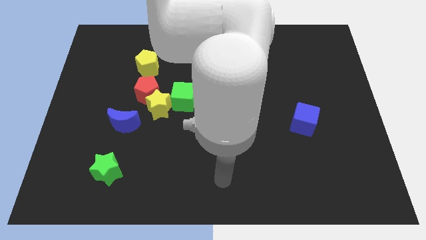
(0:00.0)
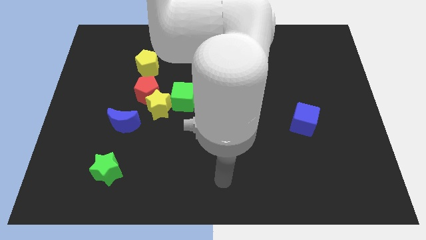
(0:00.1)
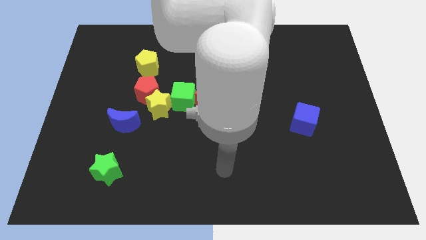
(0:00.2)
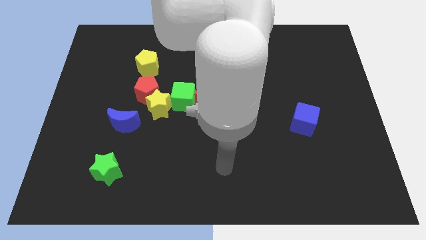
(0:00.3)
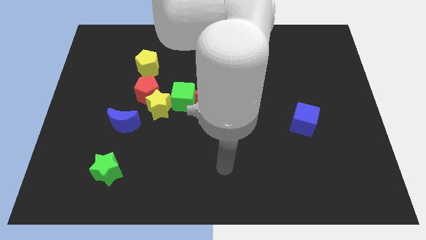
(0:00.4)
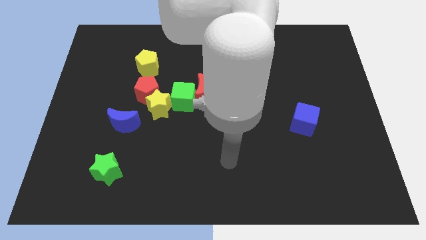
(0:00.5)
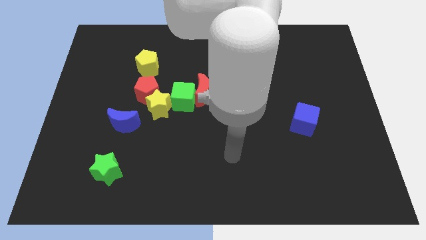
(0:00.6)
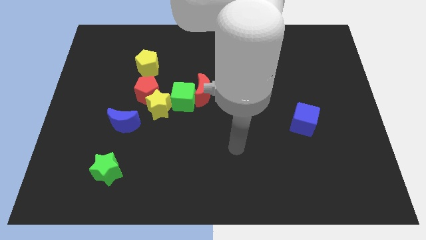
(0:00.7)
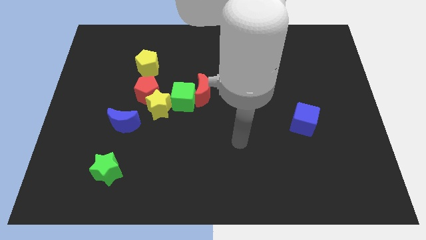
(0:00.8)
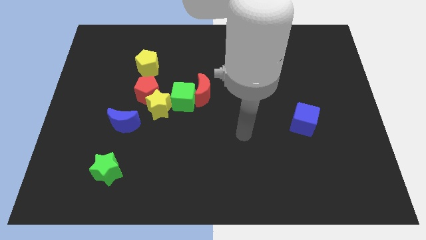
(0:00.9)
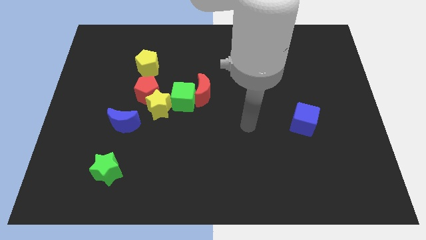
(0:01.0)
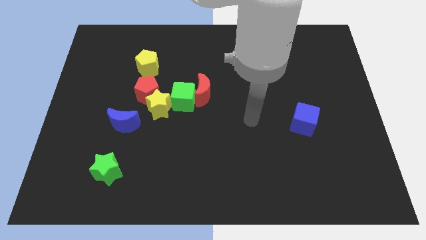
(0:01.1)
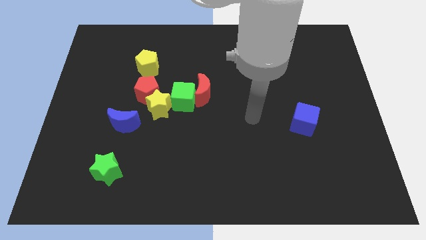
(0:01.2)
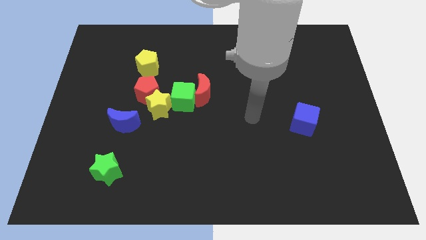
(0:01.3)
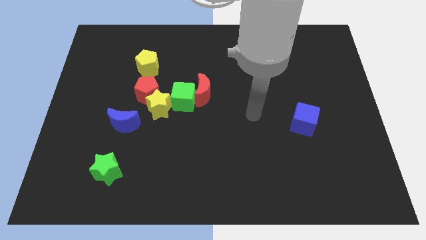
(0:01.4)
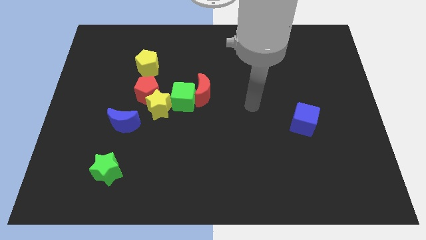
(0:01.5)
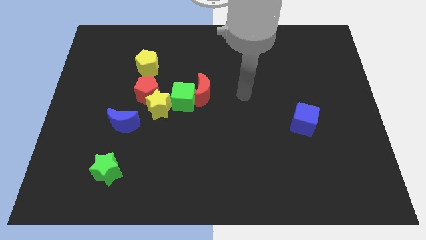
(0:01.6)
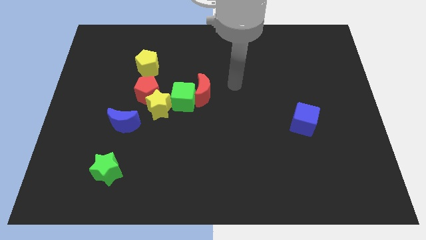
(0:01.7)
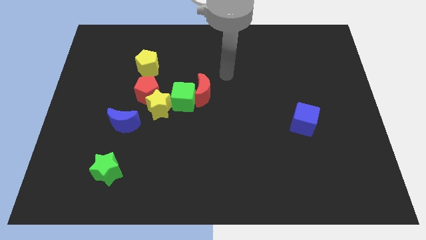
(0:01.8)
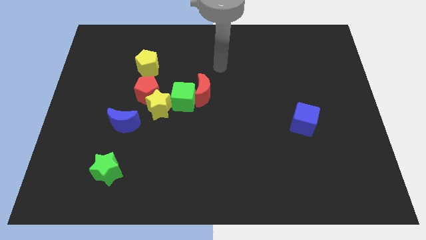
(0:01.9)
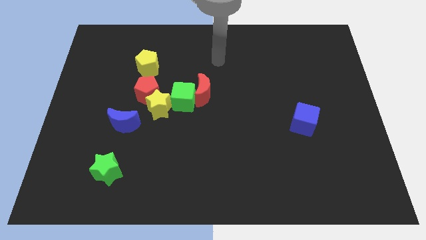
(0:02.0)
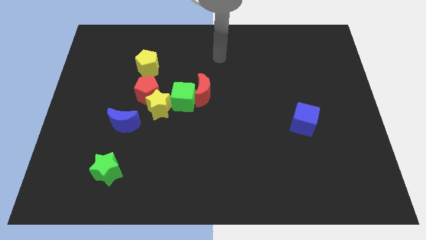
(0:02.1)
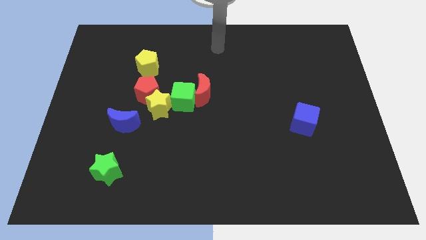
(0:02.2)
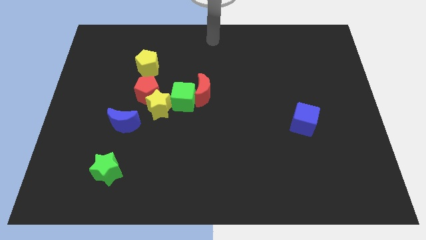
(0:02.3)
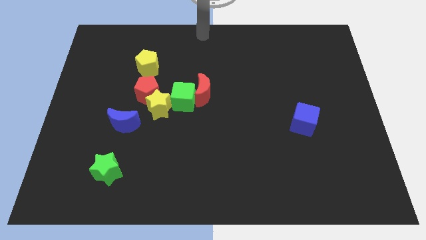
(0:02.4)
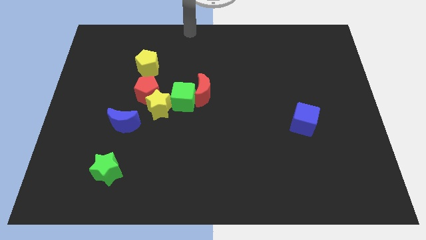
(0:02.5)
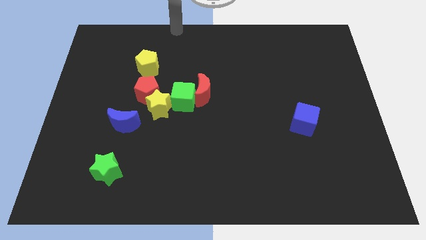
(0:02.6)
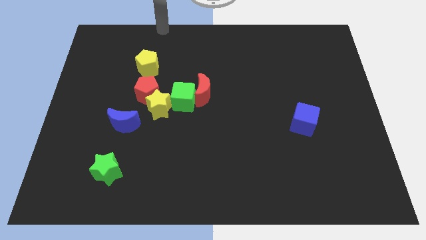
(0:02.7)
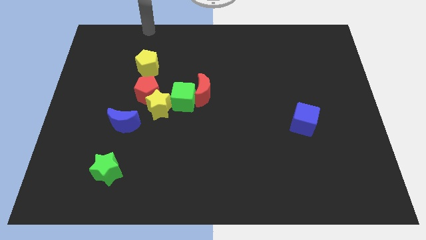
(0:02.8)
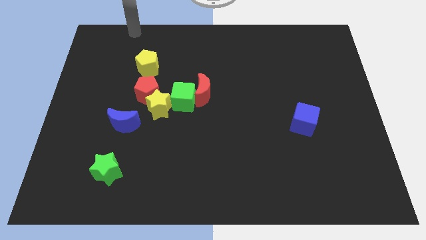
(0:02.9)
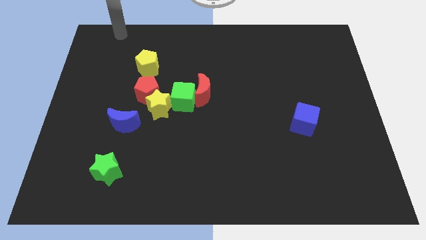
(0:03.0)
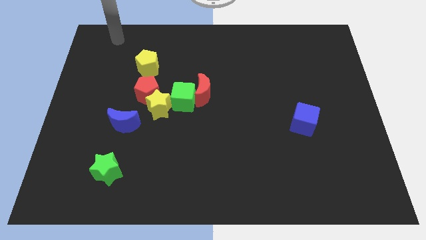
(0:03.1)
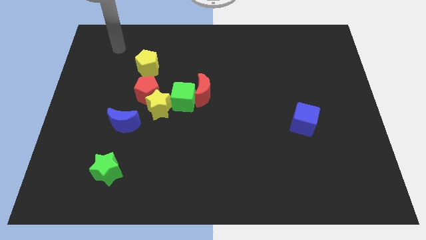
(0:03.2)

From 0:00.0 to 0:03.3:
move your hand towards the top left corner of the board

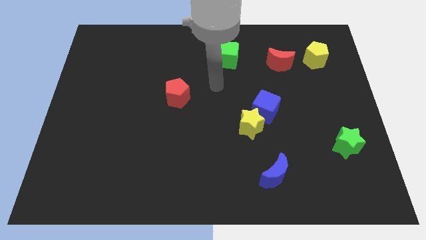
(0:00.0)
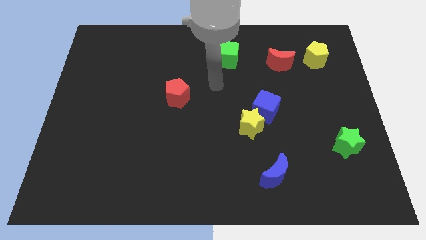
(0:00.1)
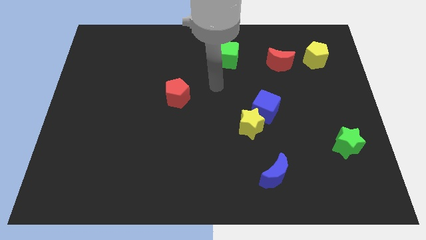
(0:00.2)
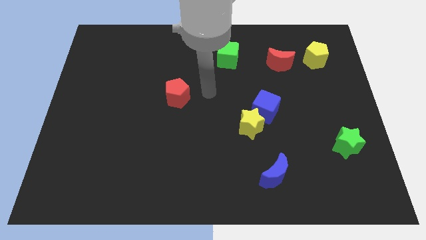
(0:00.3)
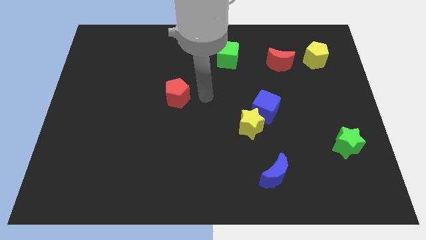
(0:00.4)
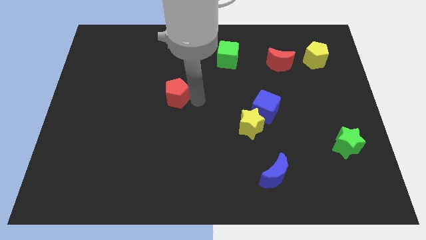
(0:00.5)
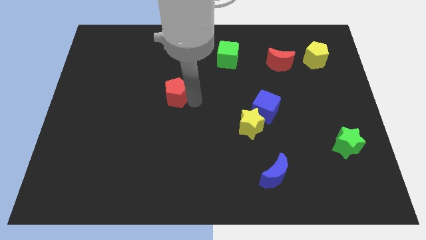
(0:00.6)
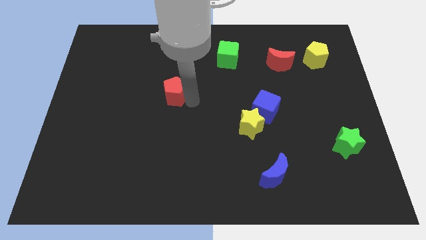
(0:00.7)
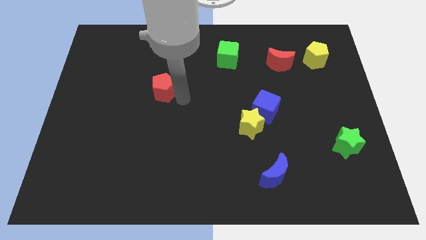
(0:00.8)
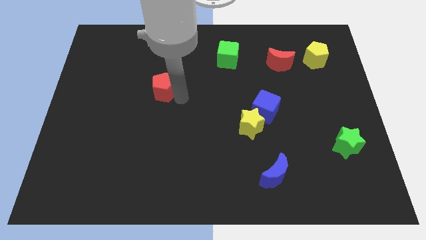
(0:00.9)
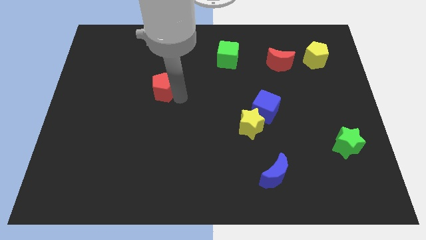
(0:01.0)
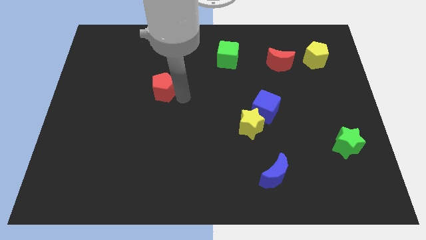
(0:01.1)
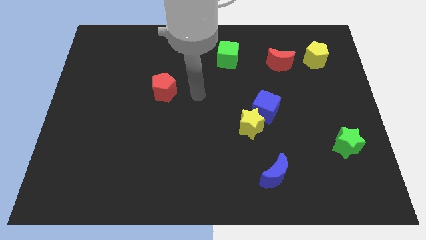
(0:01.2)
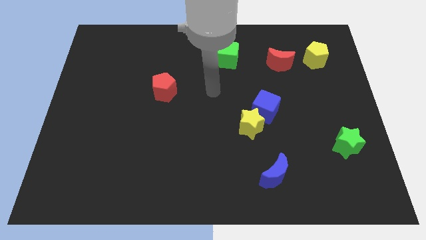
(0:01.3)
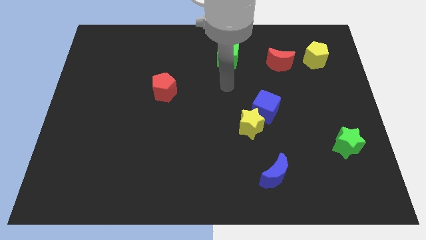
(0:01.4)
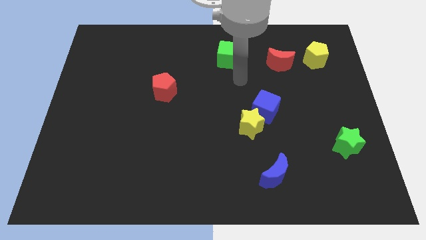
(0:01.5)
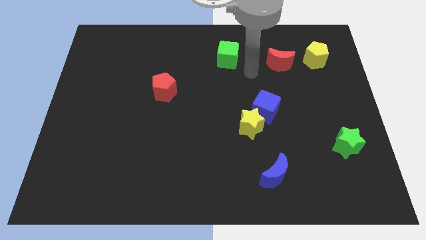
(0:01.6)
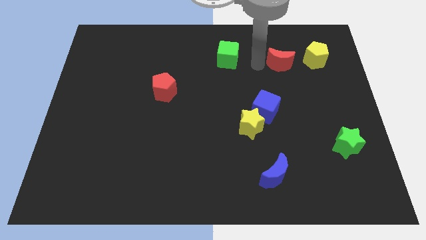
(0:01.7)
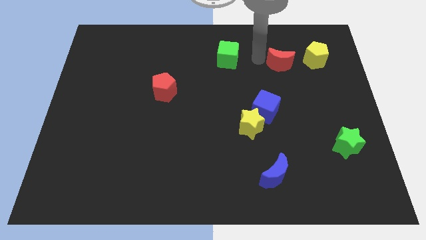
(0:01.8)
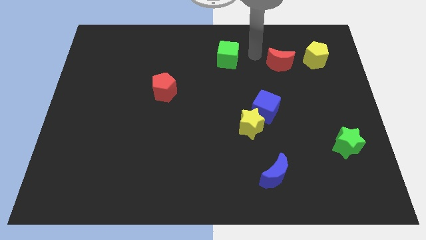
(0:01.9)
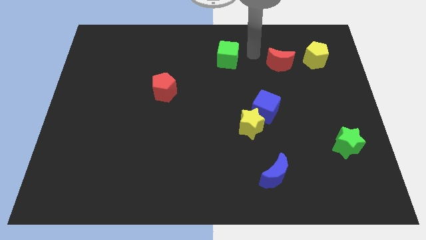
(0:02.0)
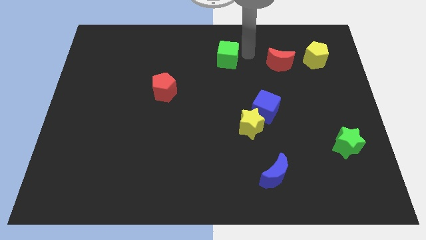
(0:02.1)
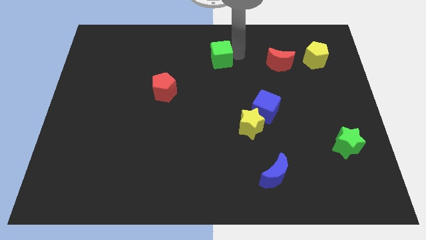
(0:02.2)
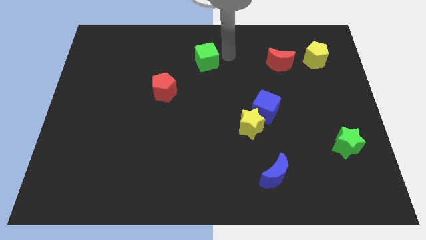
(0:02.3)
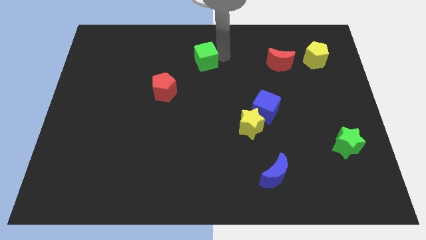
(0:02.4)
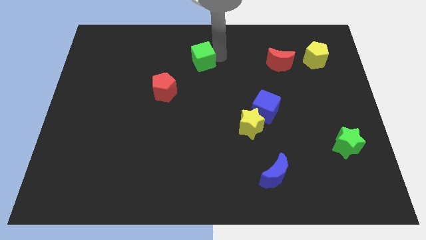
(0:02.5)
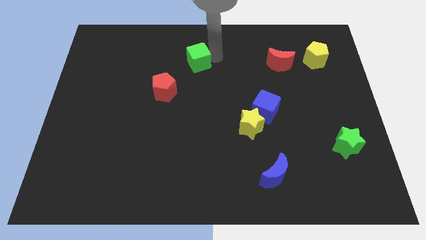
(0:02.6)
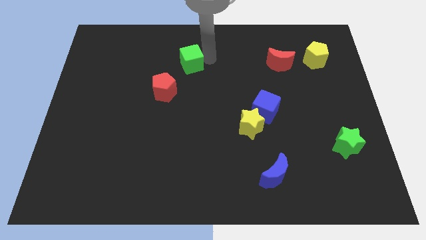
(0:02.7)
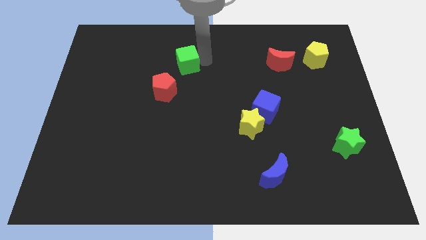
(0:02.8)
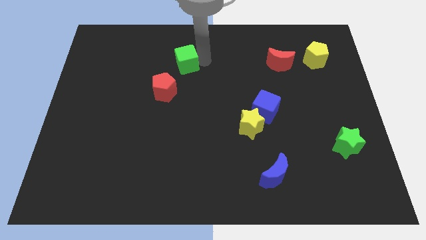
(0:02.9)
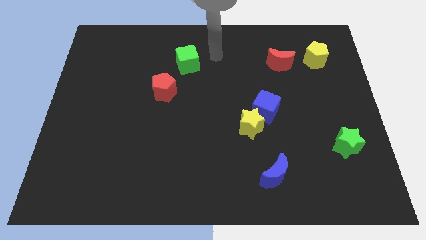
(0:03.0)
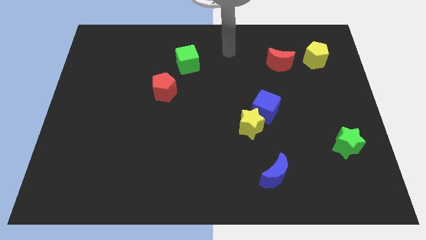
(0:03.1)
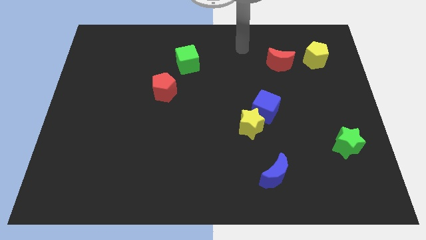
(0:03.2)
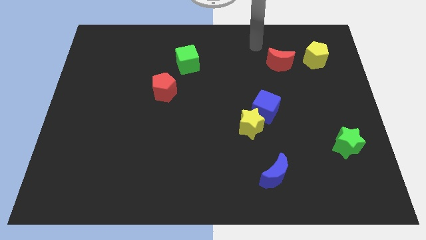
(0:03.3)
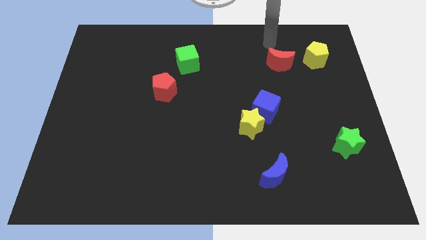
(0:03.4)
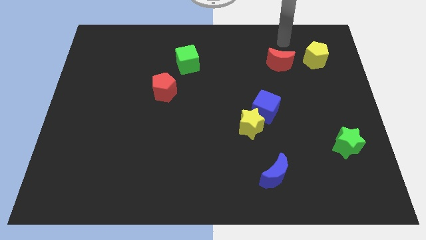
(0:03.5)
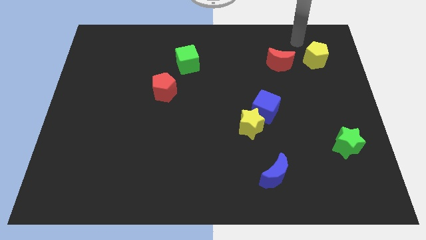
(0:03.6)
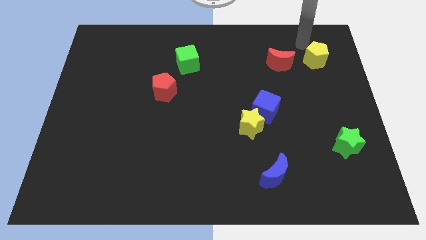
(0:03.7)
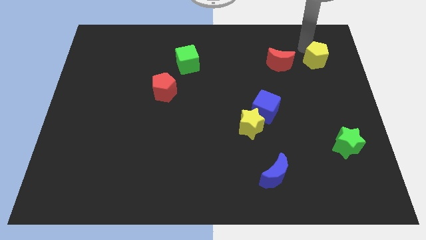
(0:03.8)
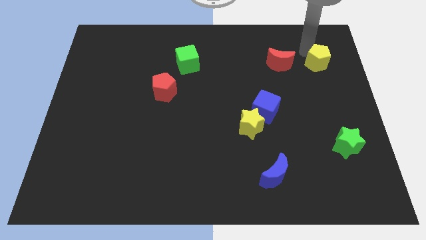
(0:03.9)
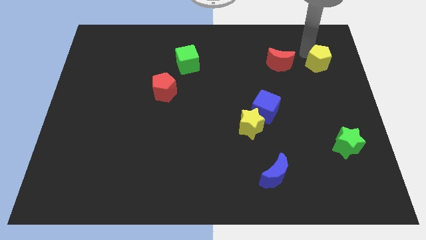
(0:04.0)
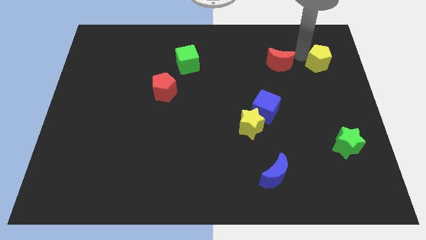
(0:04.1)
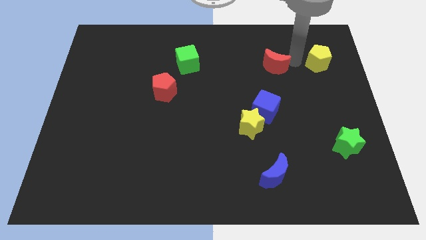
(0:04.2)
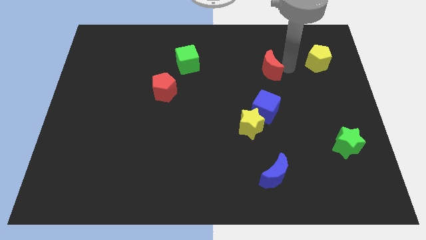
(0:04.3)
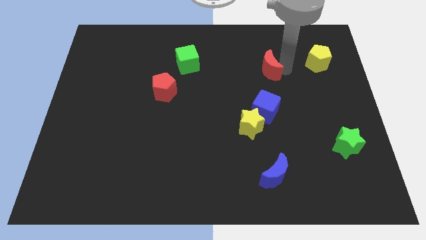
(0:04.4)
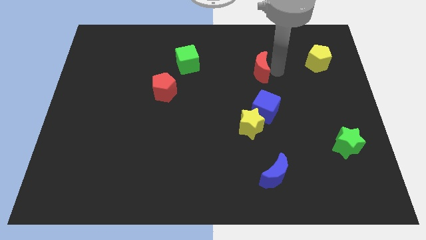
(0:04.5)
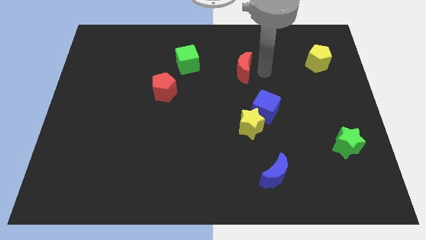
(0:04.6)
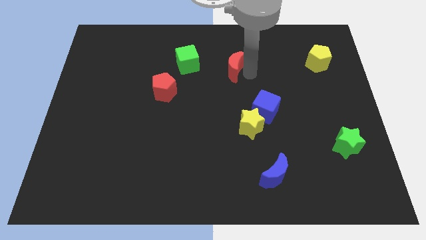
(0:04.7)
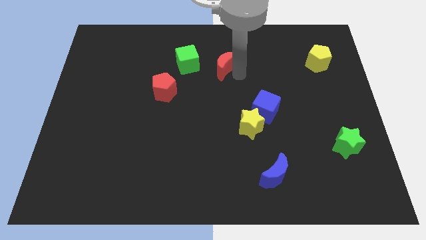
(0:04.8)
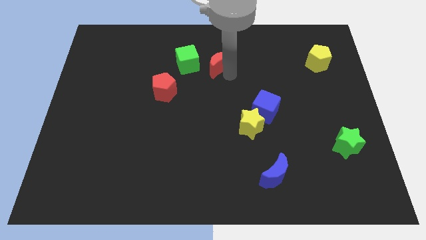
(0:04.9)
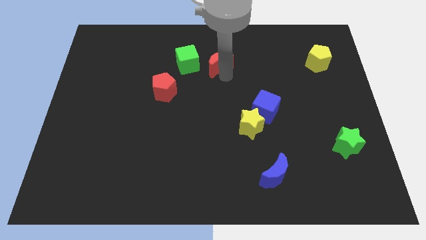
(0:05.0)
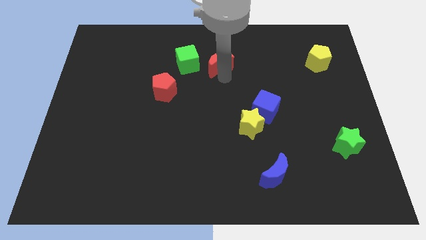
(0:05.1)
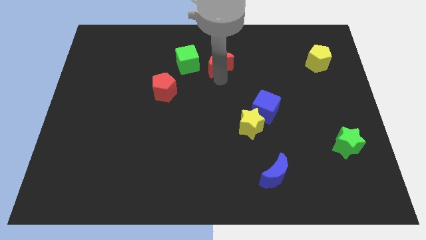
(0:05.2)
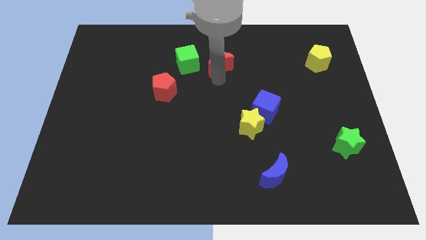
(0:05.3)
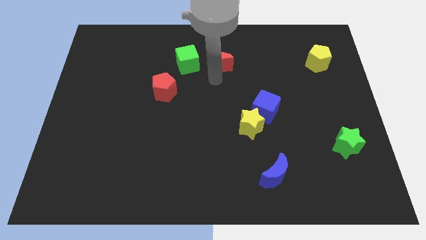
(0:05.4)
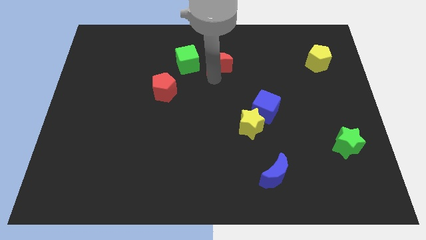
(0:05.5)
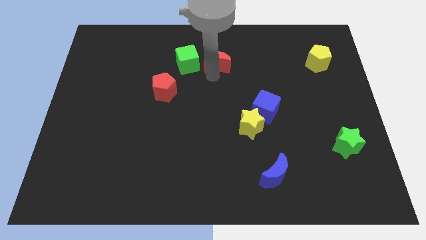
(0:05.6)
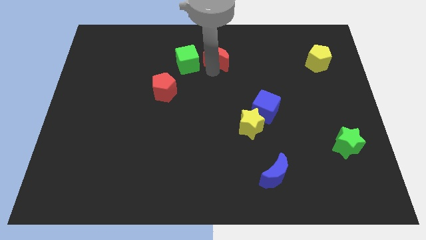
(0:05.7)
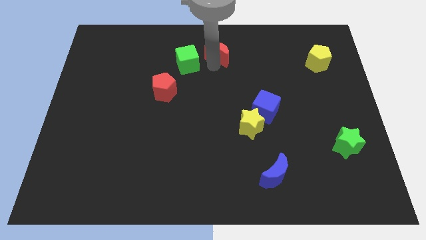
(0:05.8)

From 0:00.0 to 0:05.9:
move the red moon to the right of the green cube
